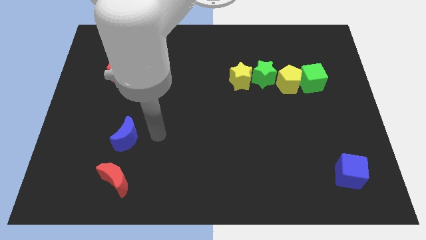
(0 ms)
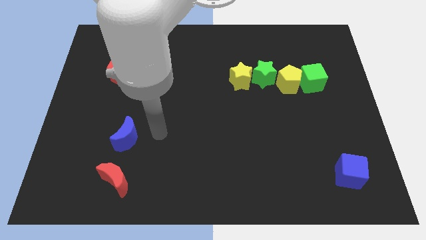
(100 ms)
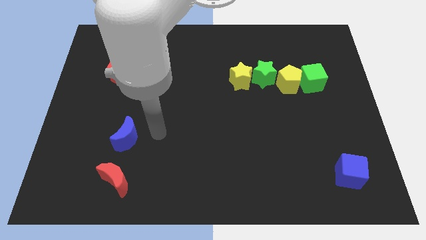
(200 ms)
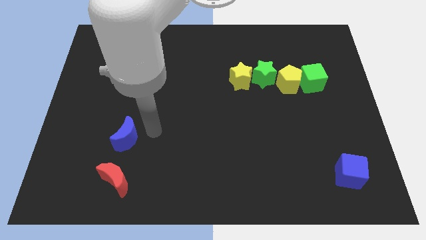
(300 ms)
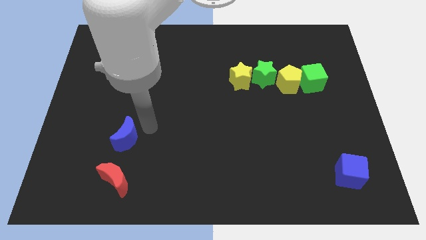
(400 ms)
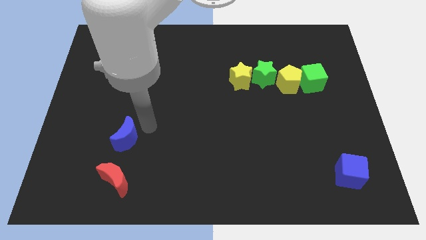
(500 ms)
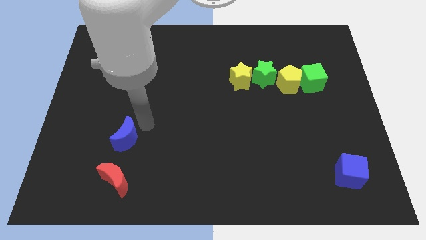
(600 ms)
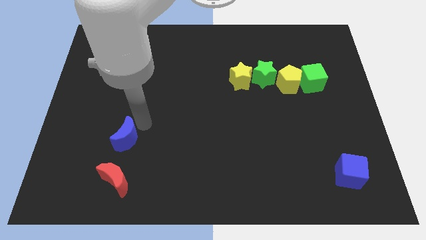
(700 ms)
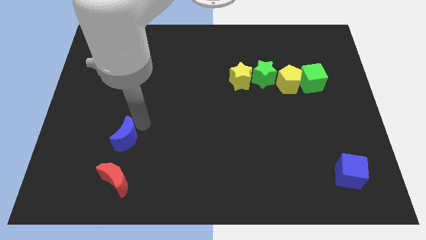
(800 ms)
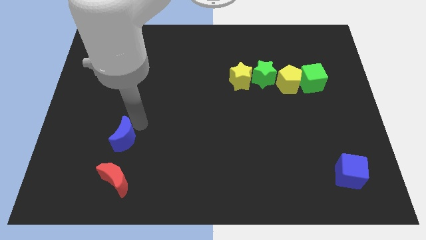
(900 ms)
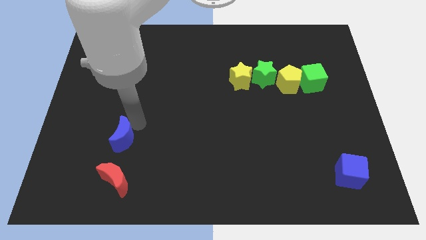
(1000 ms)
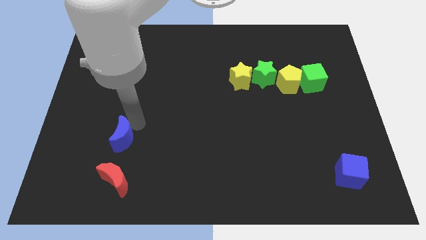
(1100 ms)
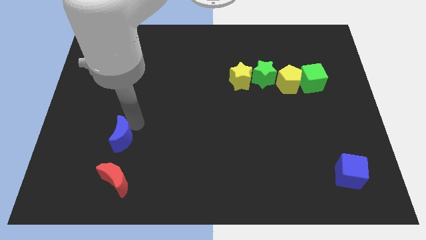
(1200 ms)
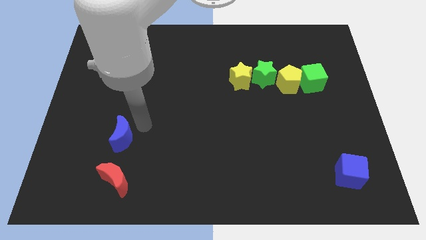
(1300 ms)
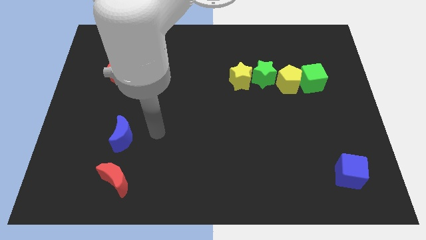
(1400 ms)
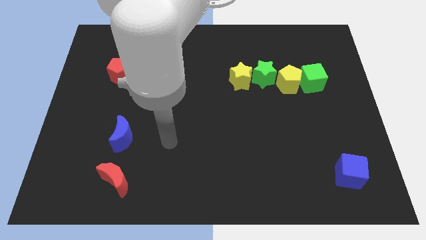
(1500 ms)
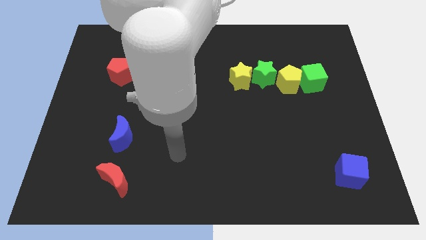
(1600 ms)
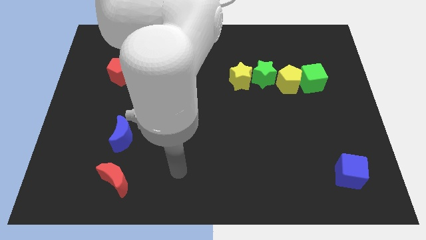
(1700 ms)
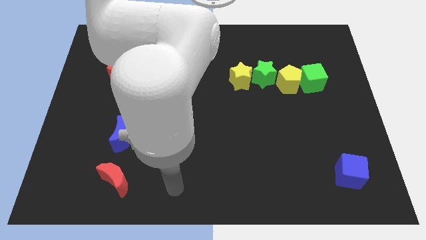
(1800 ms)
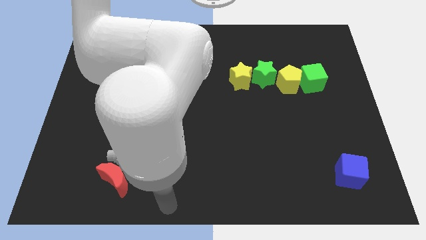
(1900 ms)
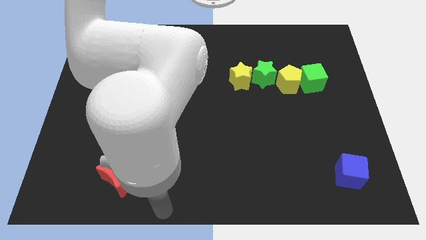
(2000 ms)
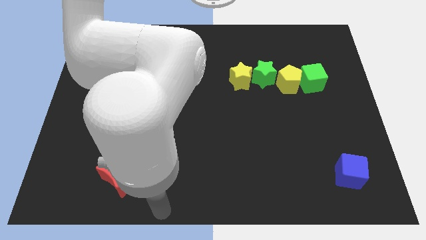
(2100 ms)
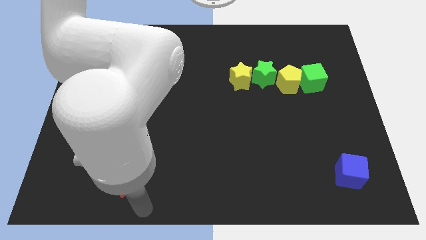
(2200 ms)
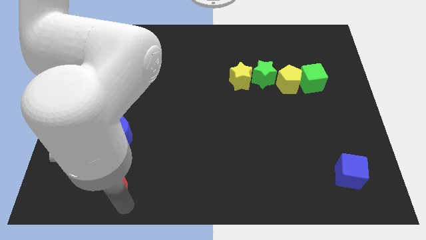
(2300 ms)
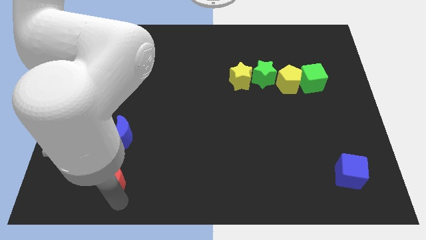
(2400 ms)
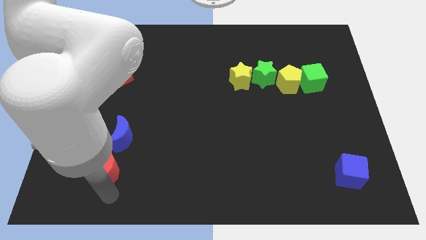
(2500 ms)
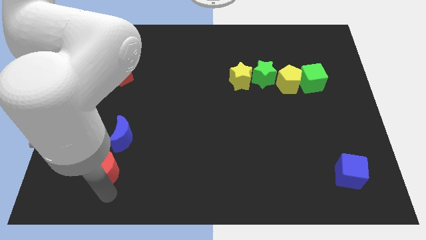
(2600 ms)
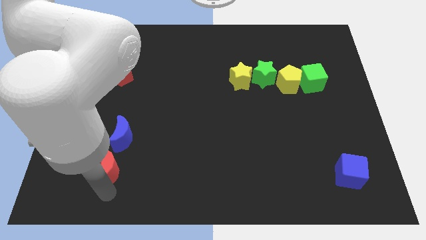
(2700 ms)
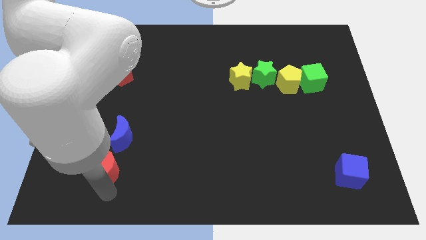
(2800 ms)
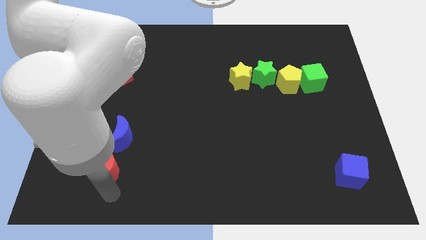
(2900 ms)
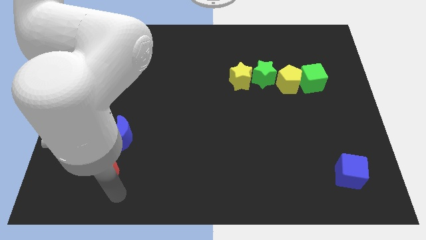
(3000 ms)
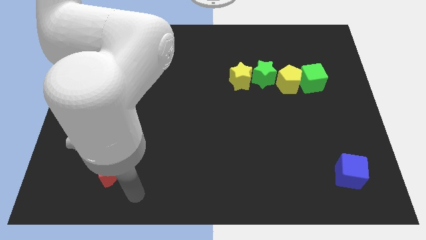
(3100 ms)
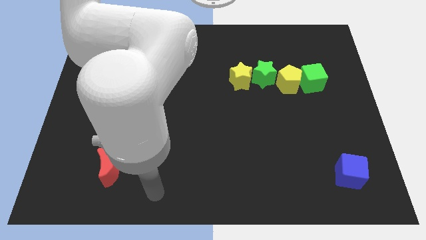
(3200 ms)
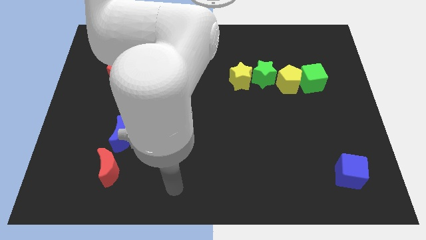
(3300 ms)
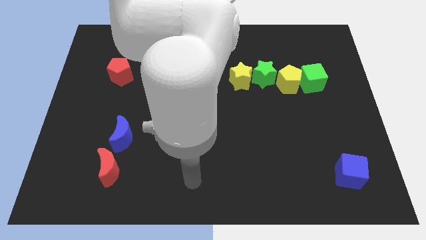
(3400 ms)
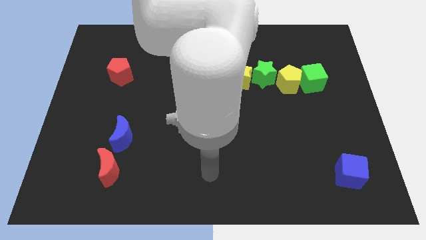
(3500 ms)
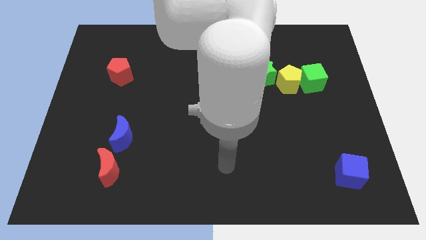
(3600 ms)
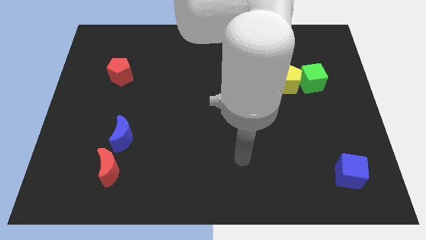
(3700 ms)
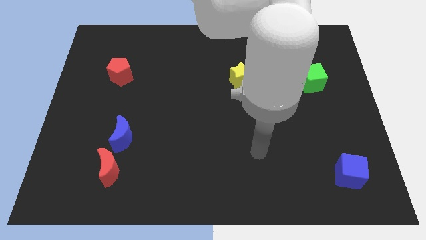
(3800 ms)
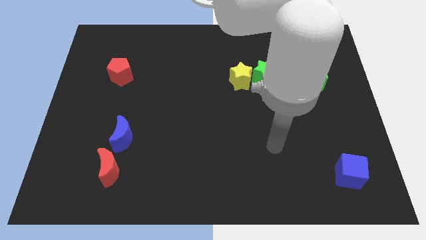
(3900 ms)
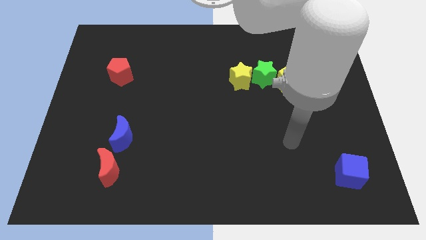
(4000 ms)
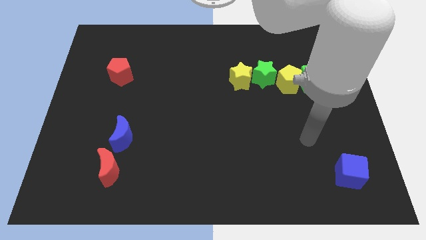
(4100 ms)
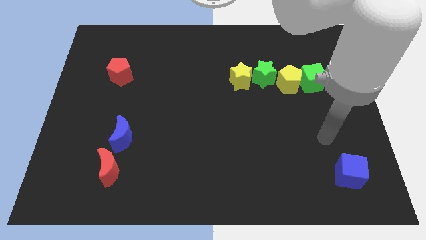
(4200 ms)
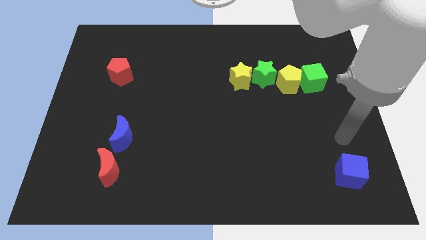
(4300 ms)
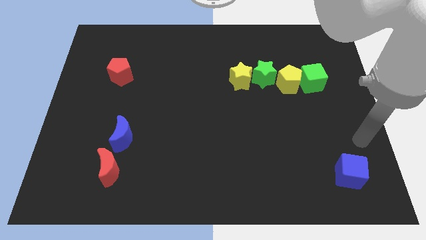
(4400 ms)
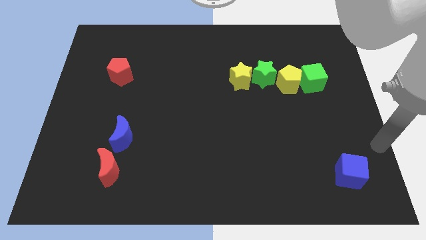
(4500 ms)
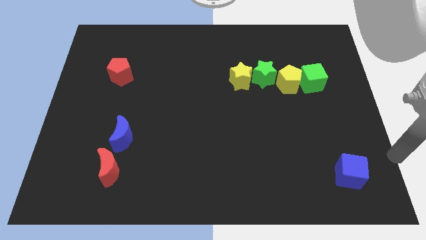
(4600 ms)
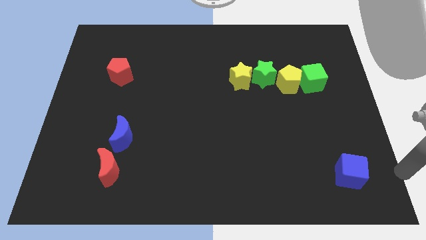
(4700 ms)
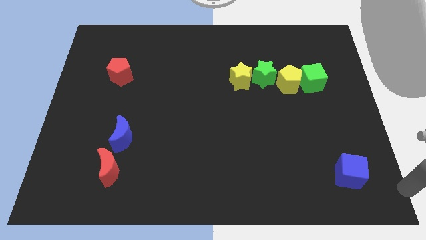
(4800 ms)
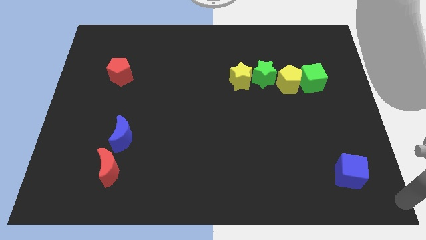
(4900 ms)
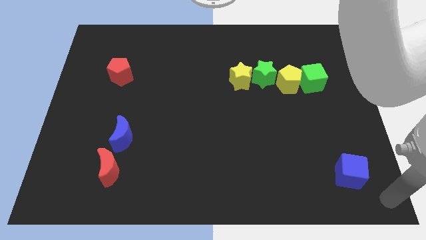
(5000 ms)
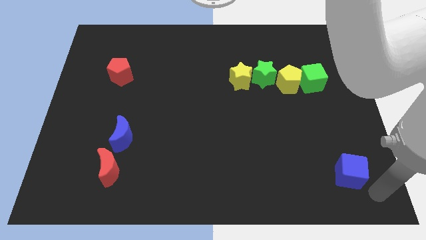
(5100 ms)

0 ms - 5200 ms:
move your arm to the bottom of the blue cube

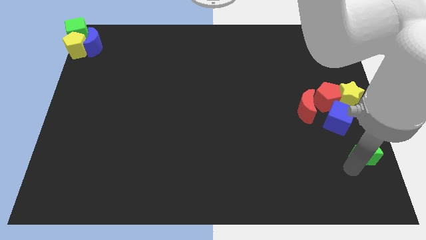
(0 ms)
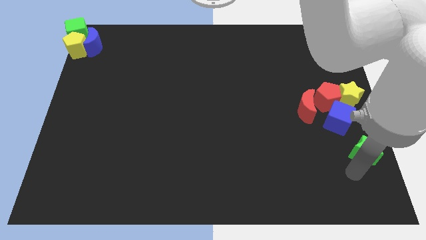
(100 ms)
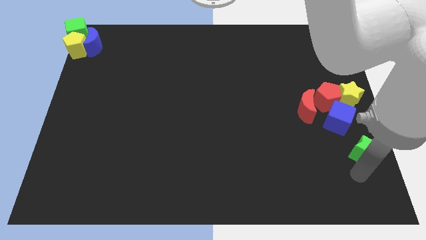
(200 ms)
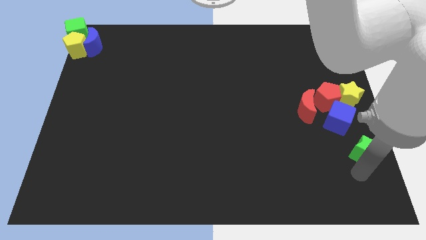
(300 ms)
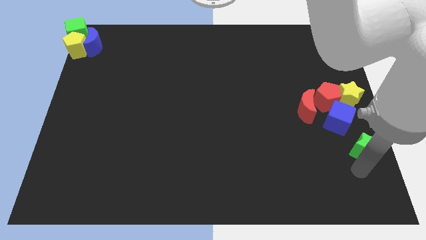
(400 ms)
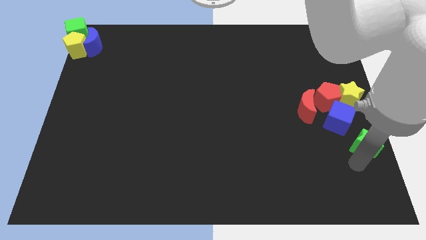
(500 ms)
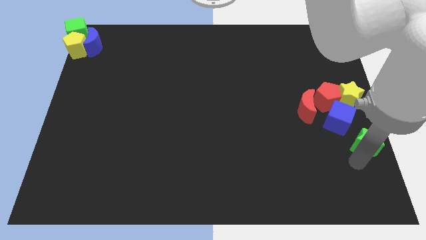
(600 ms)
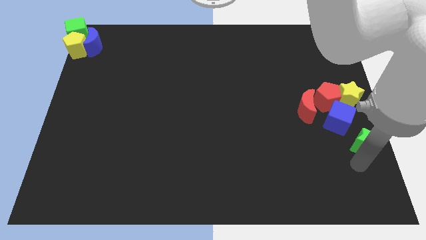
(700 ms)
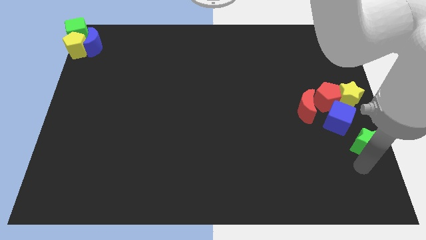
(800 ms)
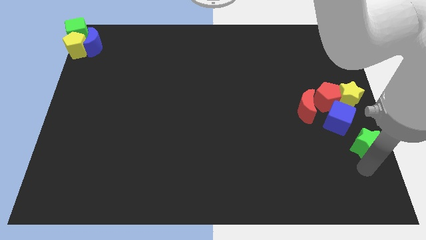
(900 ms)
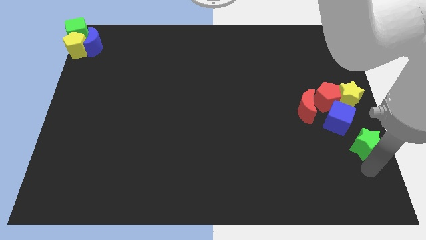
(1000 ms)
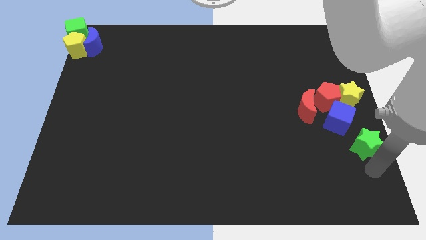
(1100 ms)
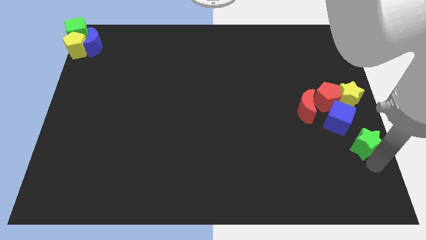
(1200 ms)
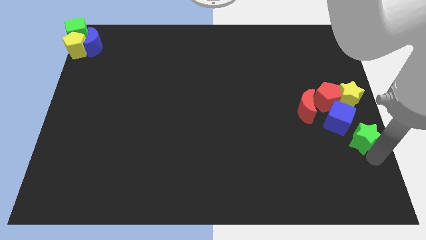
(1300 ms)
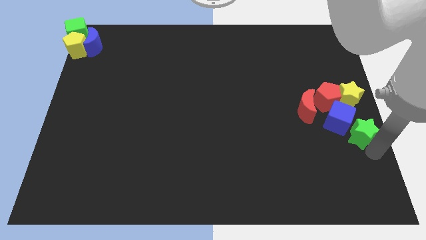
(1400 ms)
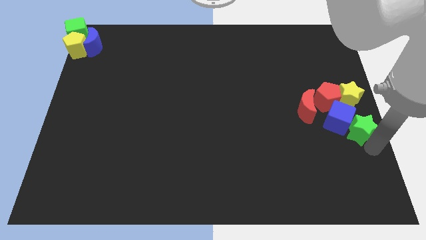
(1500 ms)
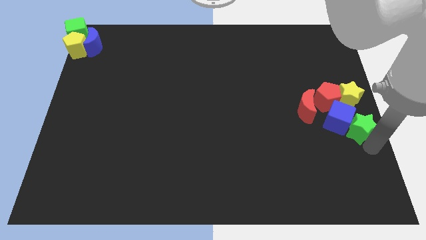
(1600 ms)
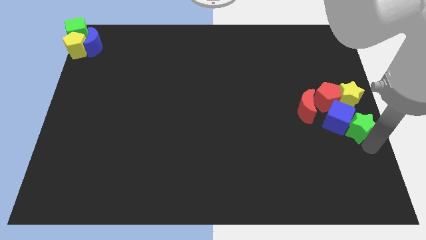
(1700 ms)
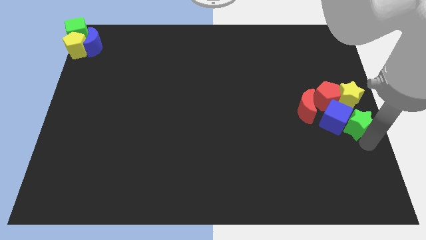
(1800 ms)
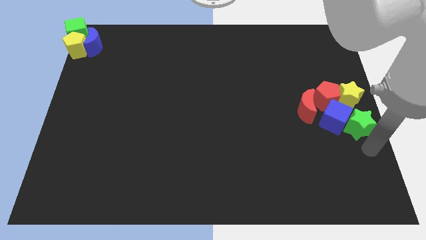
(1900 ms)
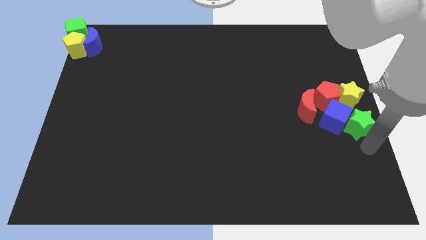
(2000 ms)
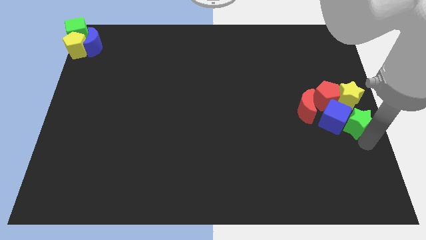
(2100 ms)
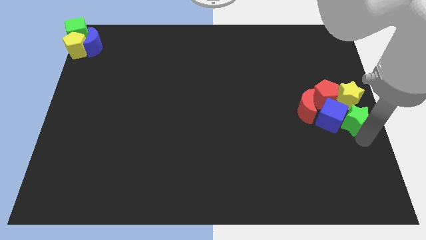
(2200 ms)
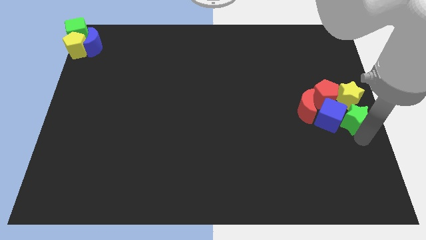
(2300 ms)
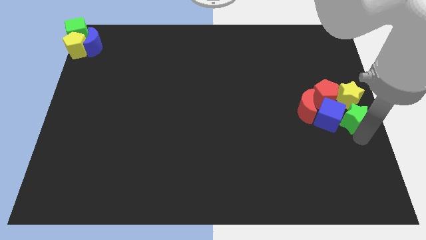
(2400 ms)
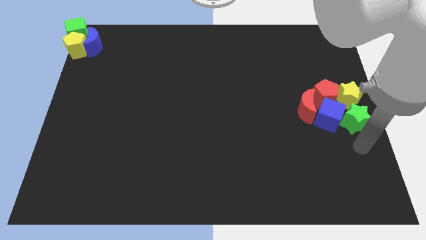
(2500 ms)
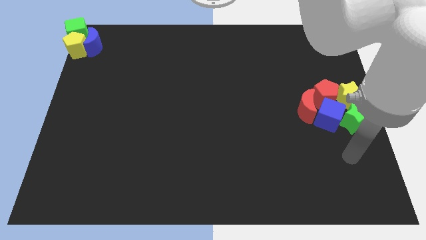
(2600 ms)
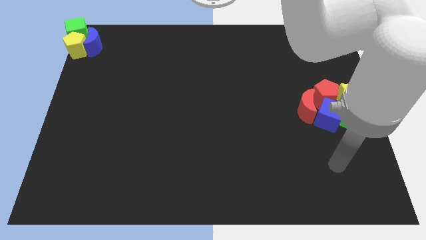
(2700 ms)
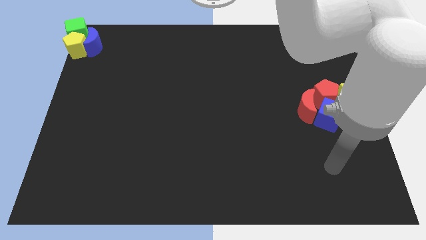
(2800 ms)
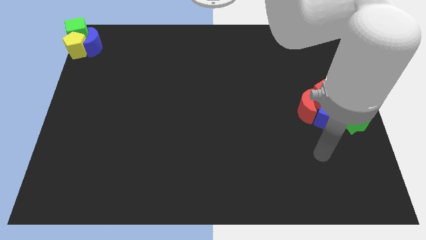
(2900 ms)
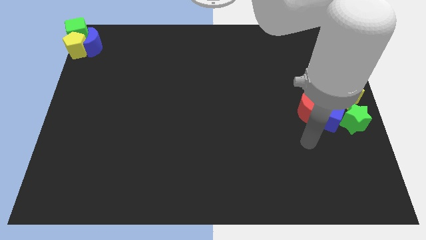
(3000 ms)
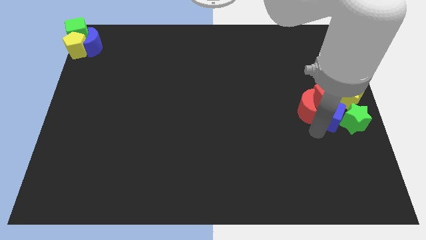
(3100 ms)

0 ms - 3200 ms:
push green star below yellow star

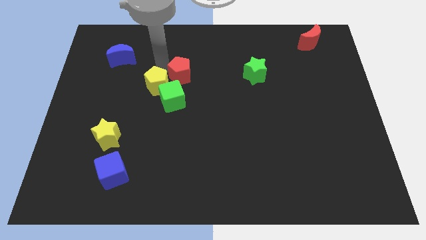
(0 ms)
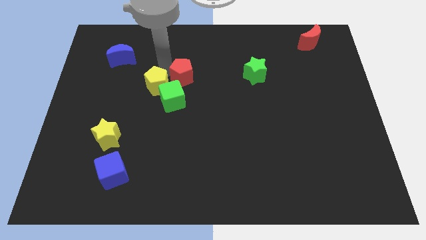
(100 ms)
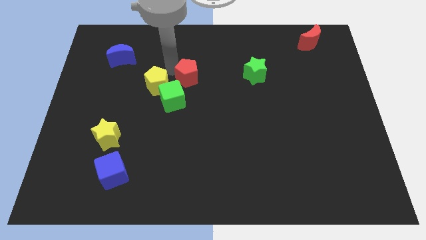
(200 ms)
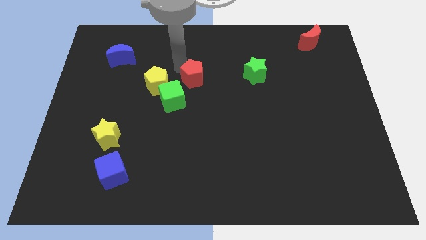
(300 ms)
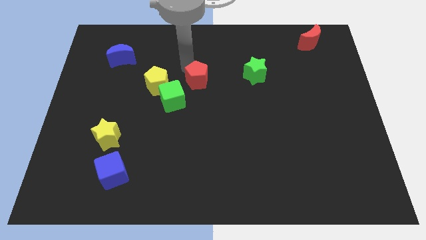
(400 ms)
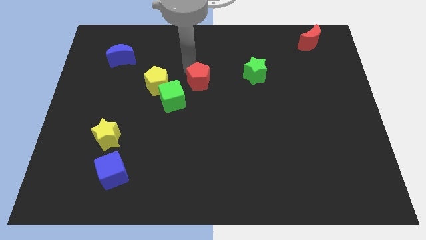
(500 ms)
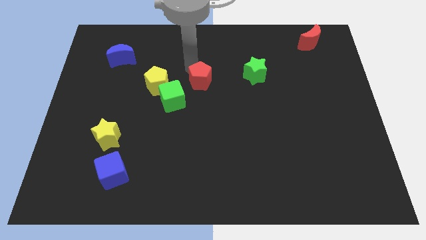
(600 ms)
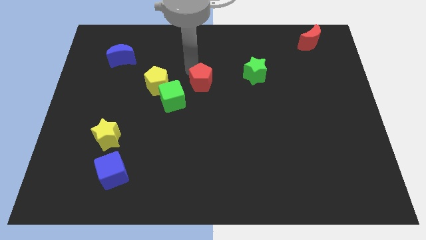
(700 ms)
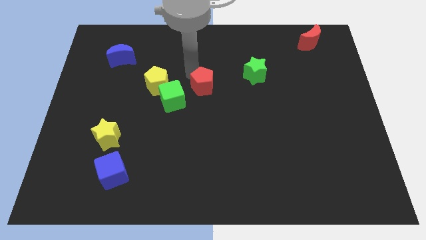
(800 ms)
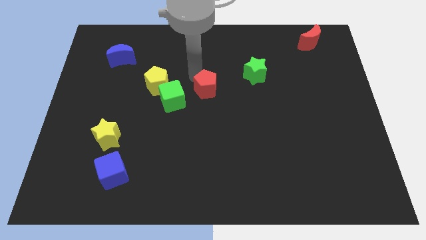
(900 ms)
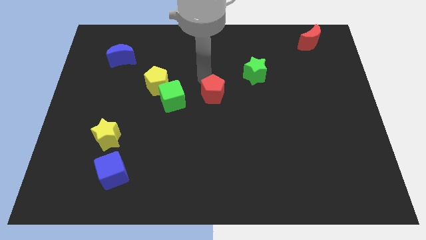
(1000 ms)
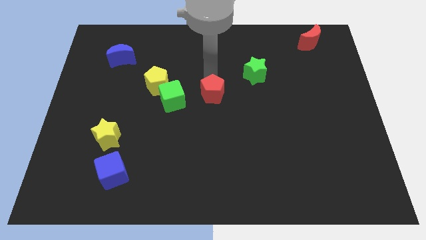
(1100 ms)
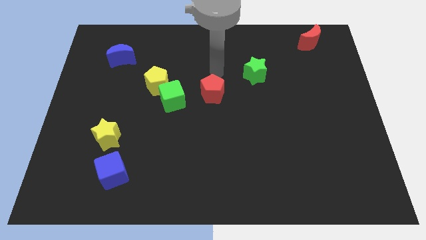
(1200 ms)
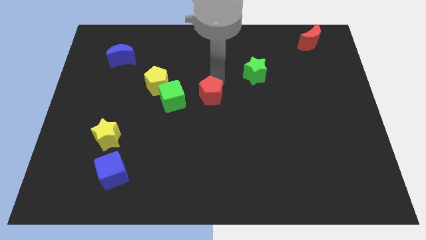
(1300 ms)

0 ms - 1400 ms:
push red pentagon beside green cube
